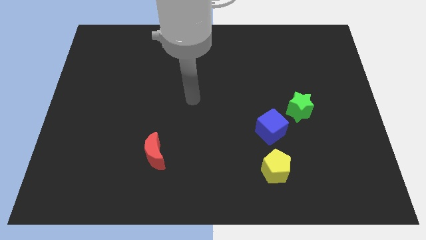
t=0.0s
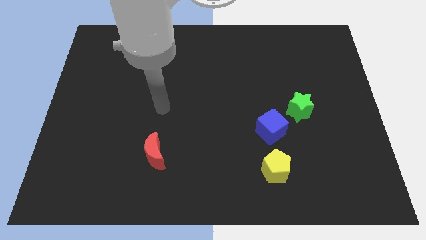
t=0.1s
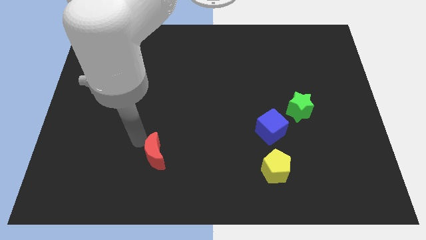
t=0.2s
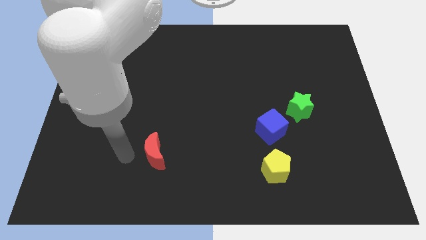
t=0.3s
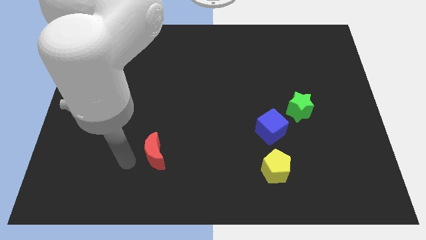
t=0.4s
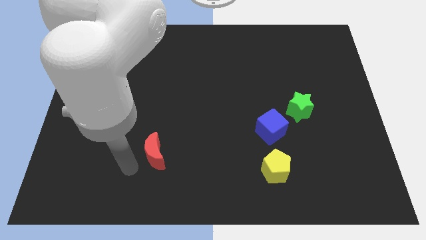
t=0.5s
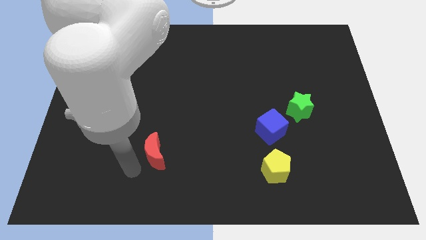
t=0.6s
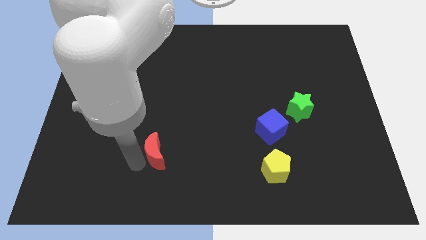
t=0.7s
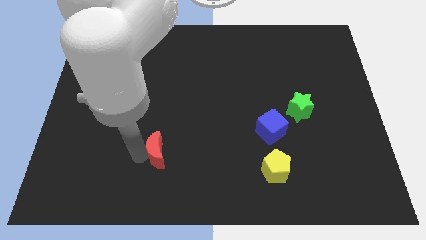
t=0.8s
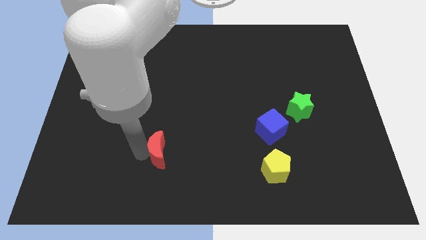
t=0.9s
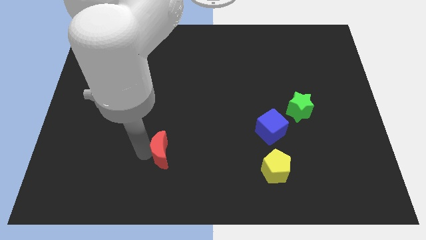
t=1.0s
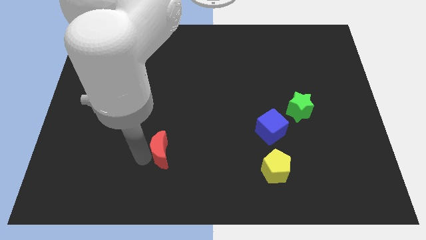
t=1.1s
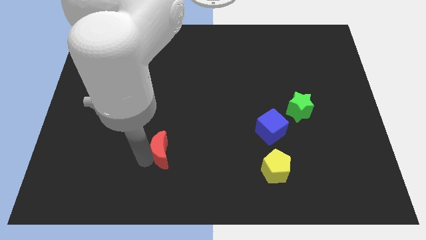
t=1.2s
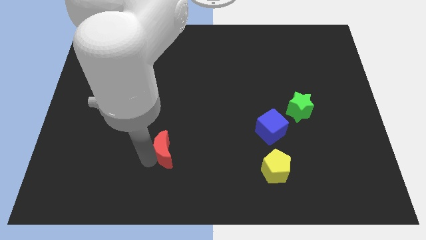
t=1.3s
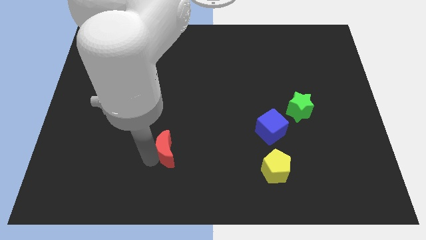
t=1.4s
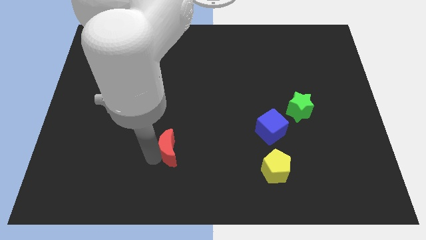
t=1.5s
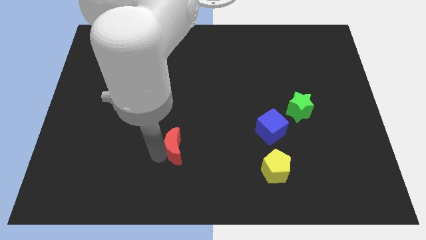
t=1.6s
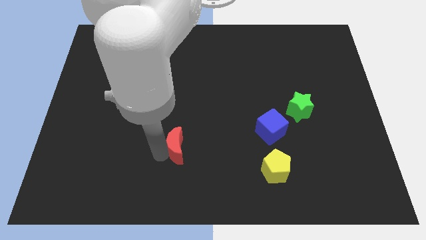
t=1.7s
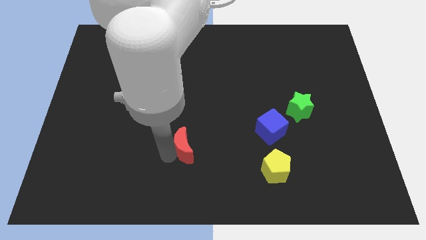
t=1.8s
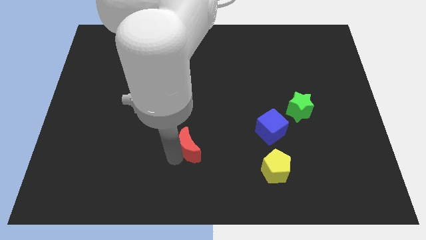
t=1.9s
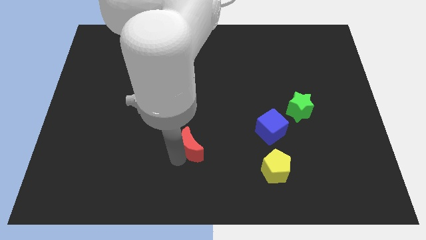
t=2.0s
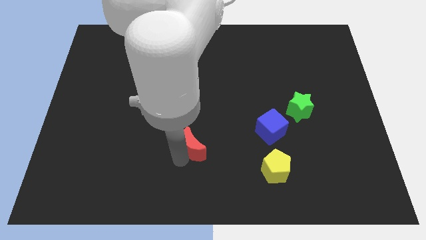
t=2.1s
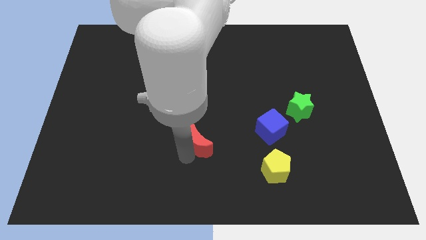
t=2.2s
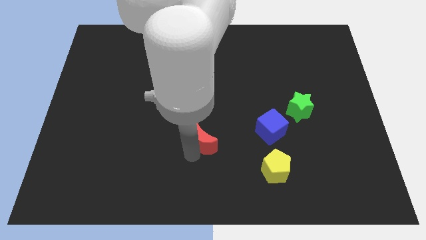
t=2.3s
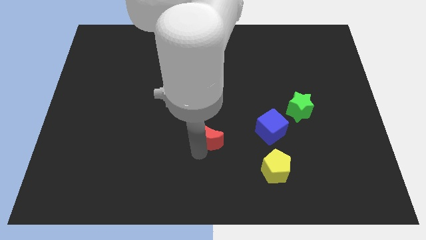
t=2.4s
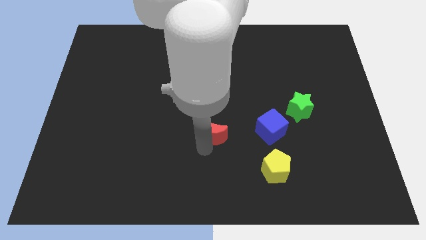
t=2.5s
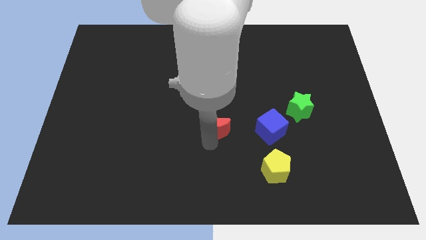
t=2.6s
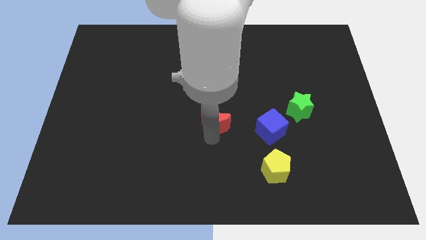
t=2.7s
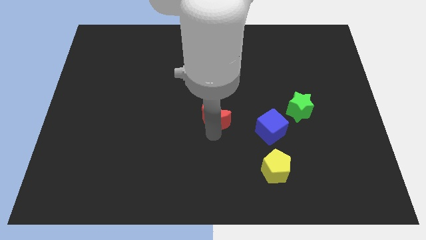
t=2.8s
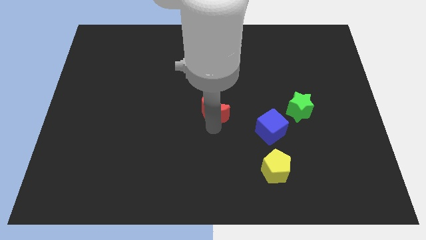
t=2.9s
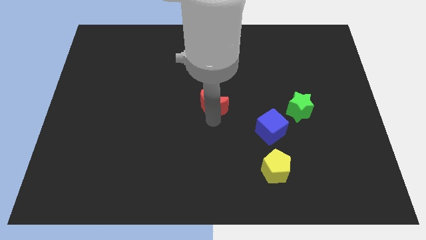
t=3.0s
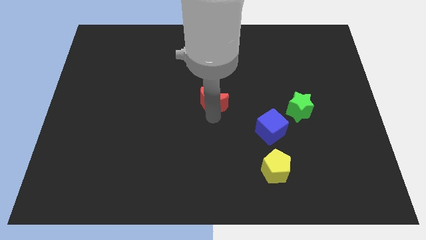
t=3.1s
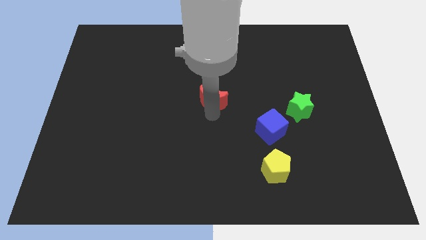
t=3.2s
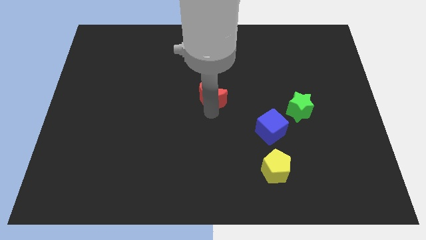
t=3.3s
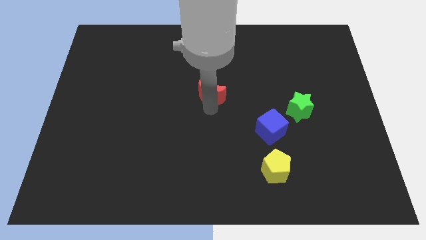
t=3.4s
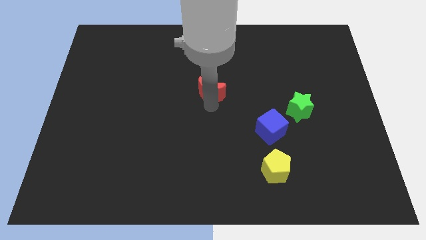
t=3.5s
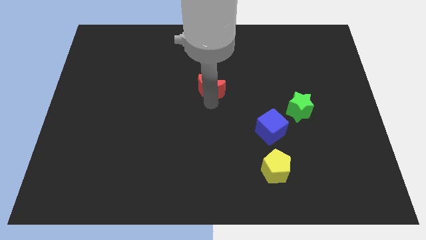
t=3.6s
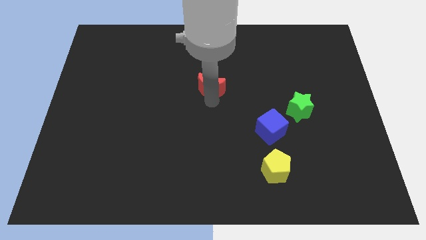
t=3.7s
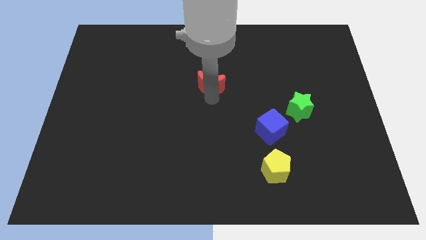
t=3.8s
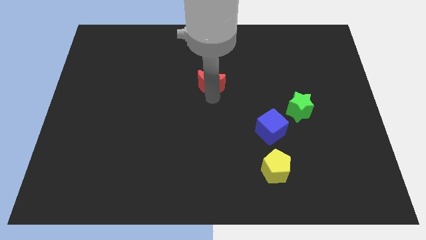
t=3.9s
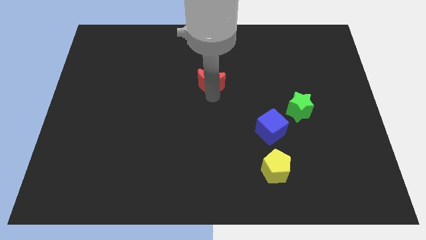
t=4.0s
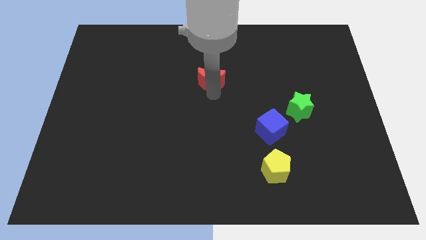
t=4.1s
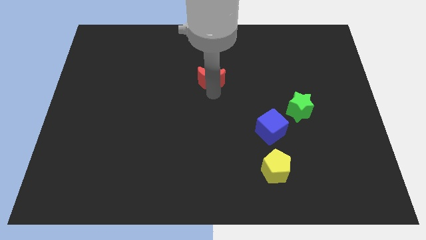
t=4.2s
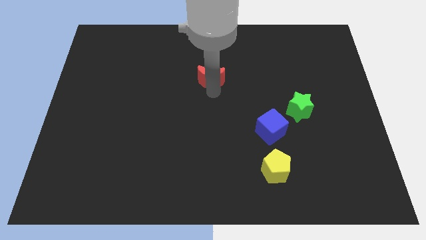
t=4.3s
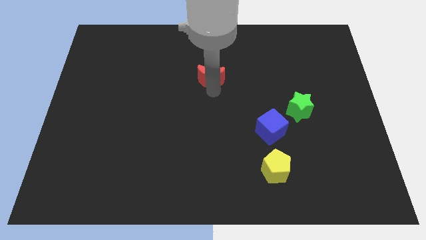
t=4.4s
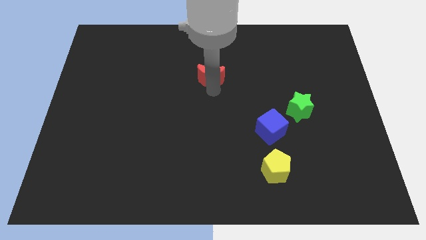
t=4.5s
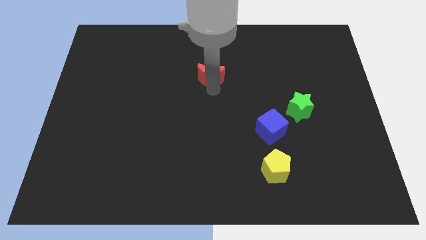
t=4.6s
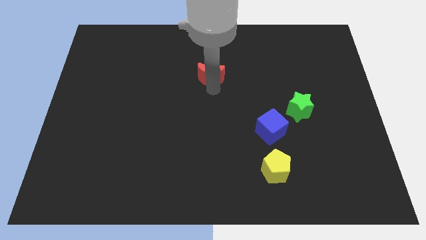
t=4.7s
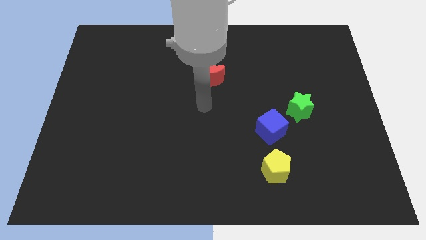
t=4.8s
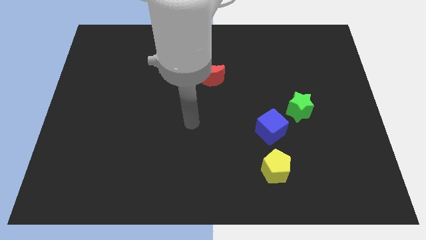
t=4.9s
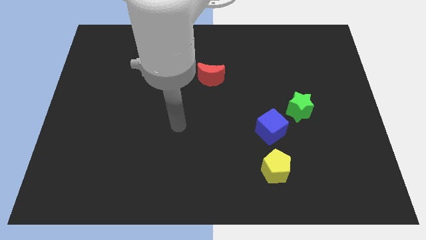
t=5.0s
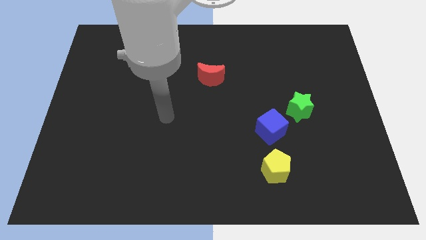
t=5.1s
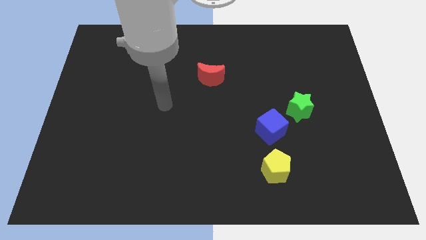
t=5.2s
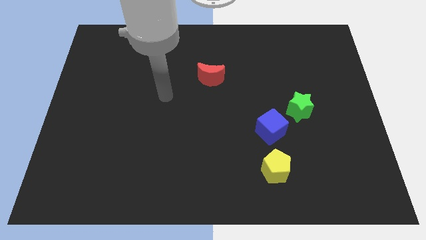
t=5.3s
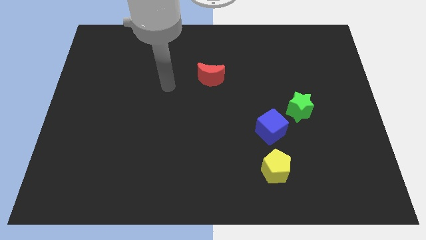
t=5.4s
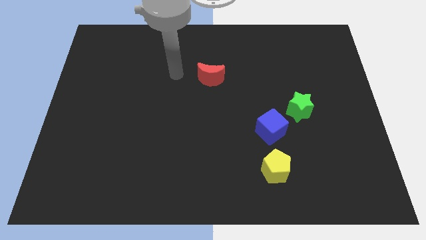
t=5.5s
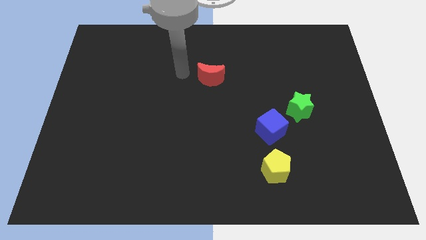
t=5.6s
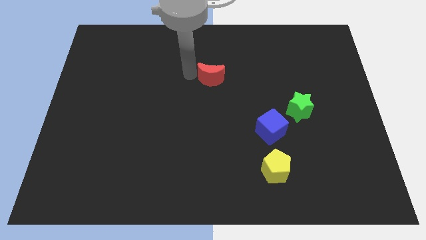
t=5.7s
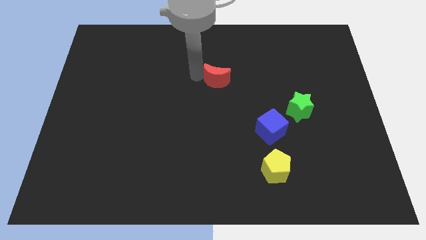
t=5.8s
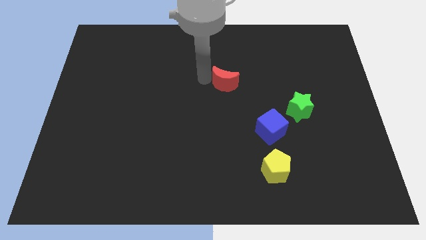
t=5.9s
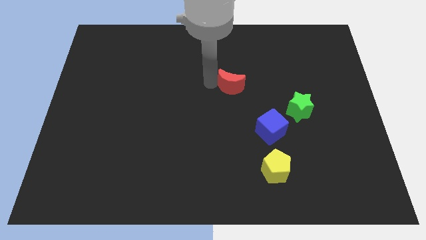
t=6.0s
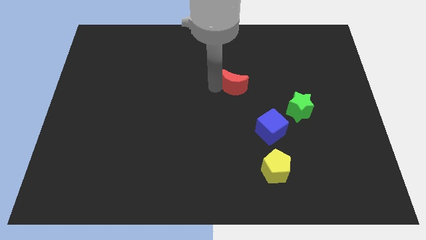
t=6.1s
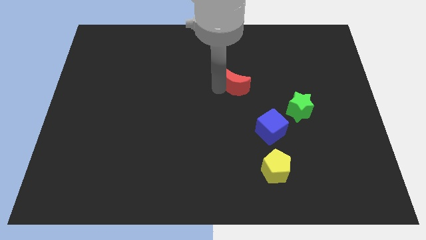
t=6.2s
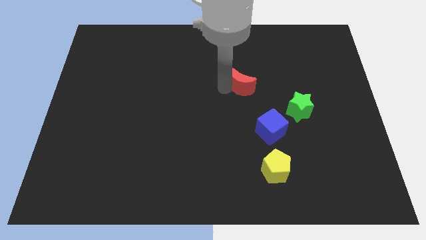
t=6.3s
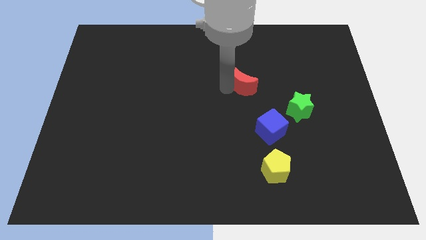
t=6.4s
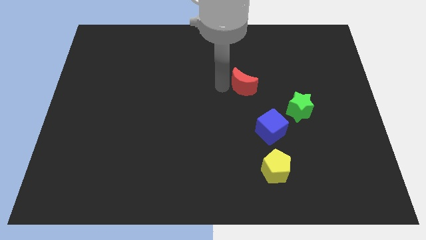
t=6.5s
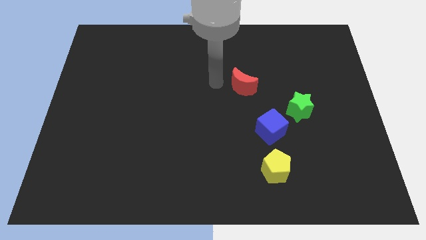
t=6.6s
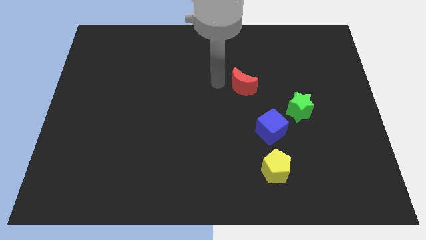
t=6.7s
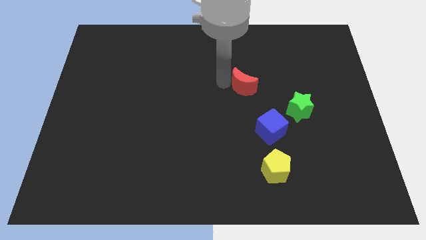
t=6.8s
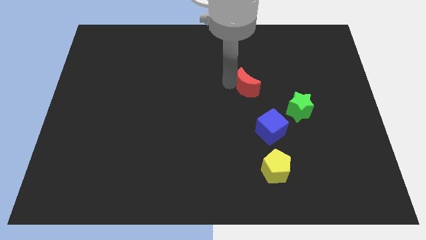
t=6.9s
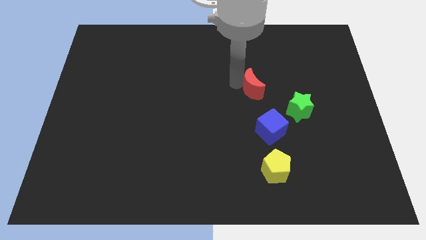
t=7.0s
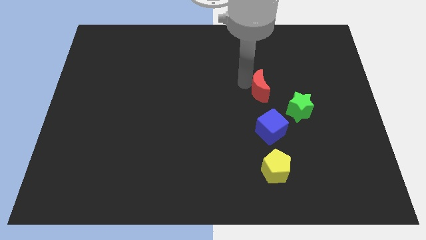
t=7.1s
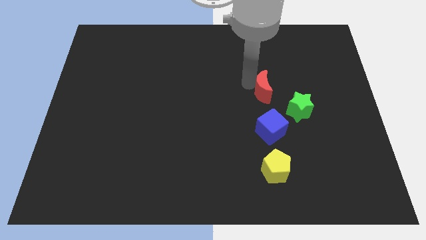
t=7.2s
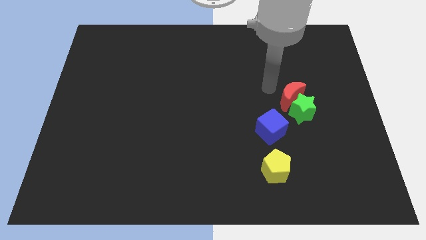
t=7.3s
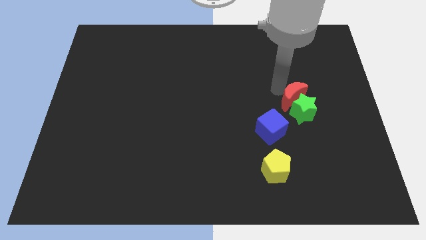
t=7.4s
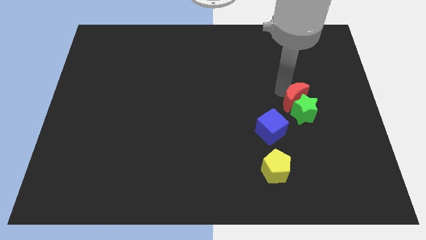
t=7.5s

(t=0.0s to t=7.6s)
slide the red moon next to the star

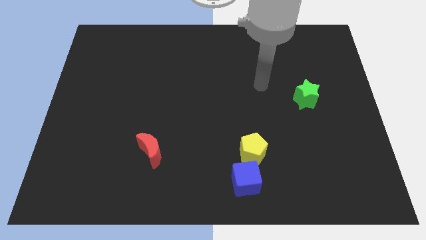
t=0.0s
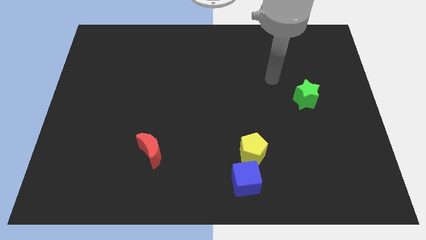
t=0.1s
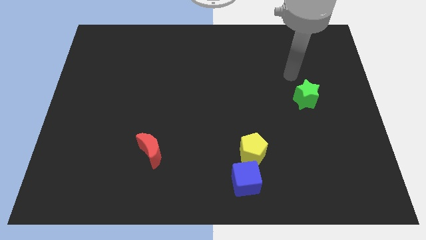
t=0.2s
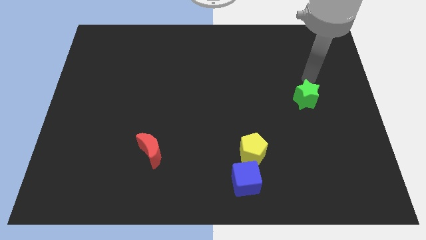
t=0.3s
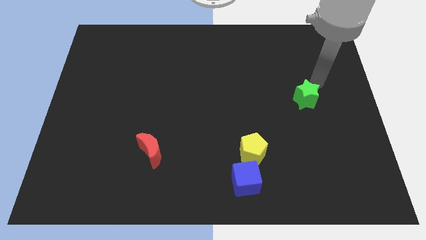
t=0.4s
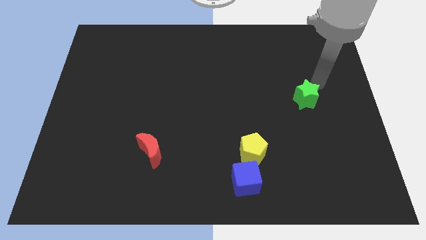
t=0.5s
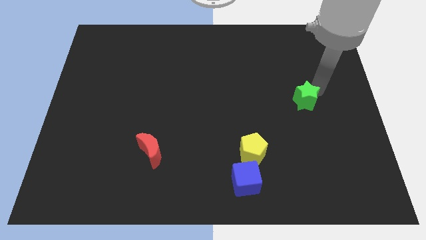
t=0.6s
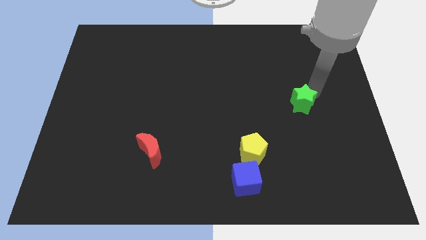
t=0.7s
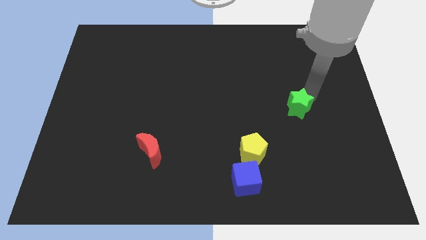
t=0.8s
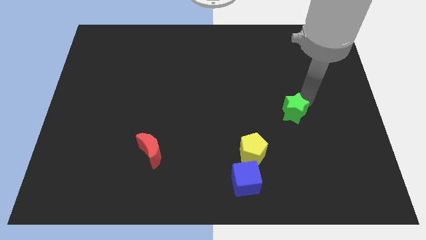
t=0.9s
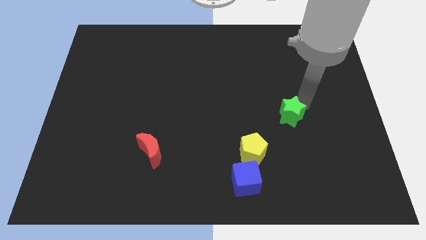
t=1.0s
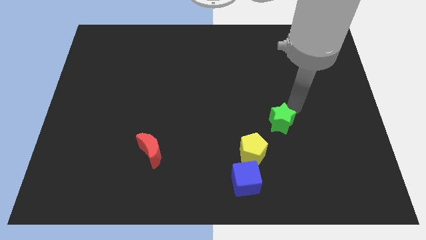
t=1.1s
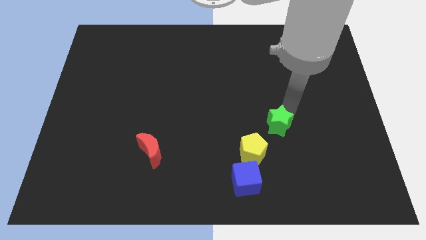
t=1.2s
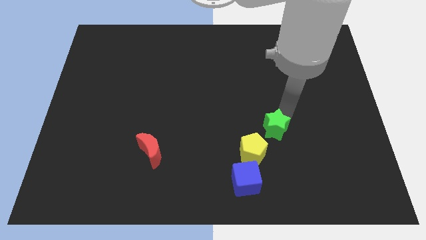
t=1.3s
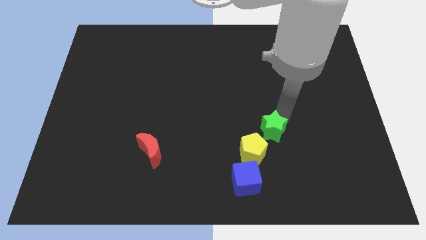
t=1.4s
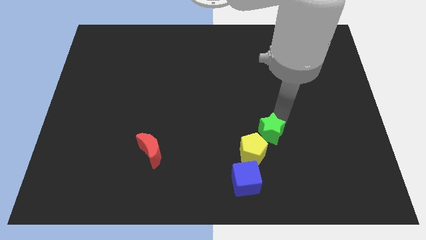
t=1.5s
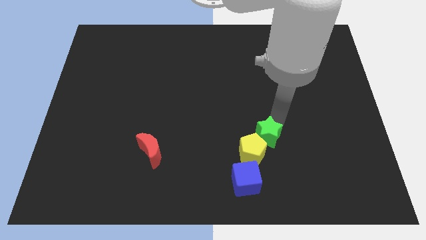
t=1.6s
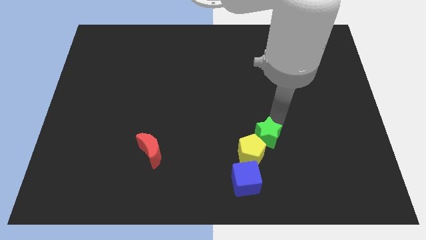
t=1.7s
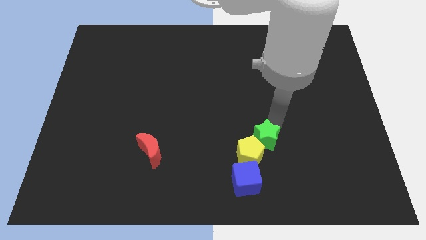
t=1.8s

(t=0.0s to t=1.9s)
move the green block close to the yellow block
